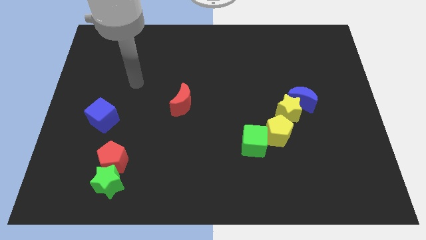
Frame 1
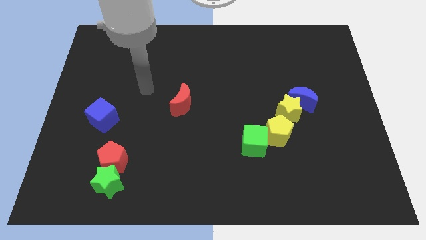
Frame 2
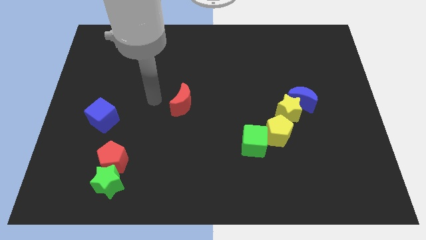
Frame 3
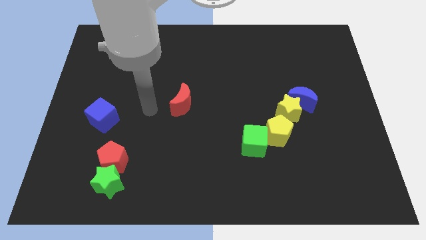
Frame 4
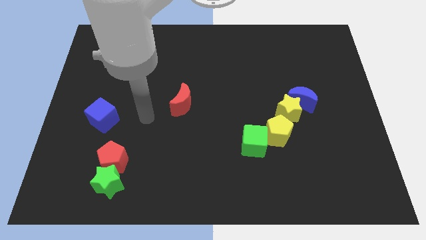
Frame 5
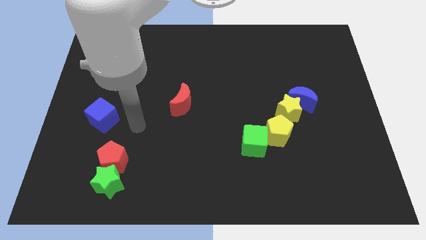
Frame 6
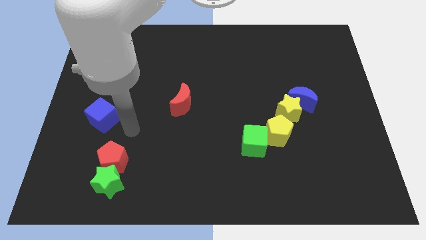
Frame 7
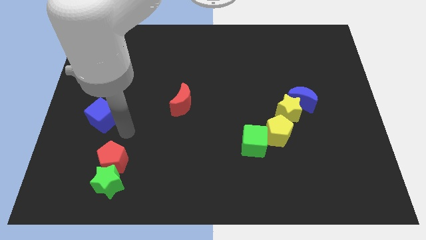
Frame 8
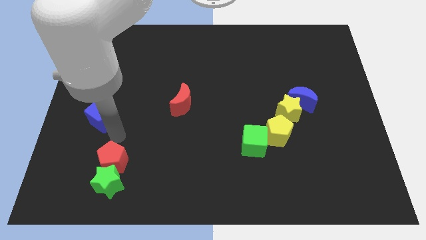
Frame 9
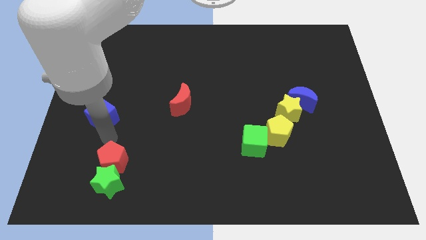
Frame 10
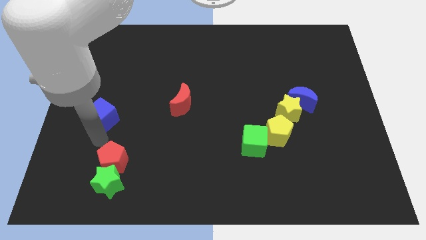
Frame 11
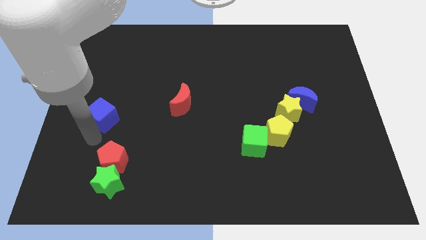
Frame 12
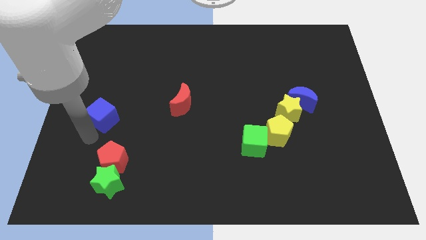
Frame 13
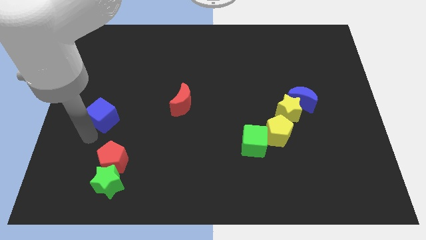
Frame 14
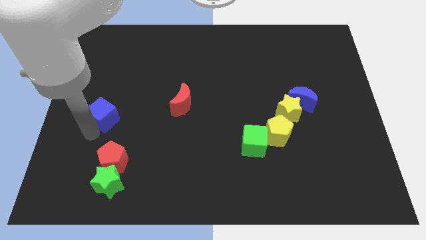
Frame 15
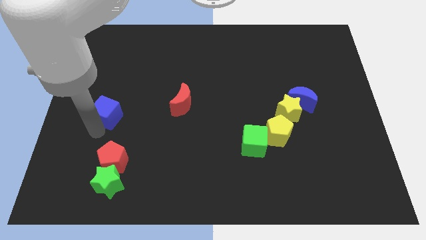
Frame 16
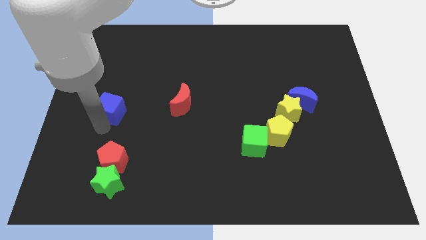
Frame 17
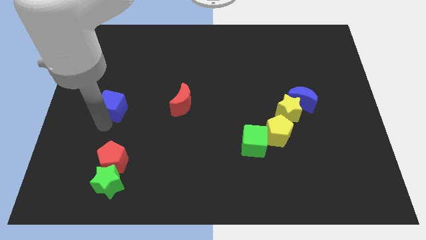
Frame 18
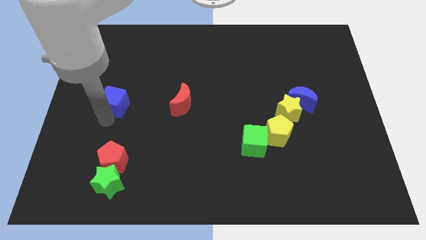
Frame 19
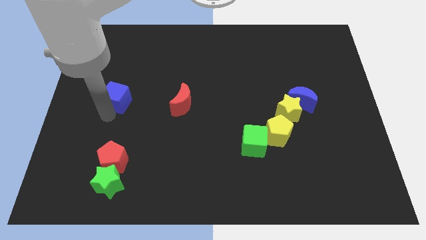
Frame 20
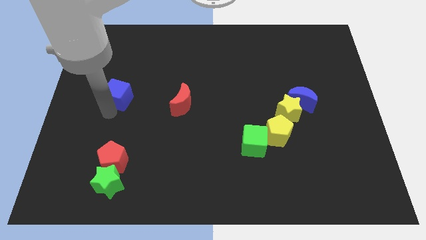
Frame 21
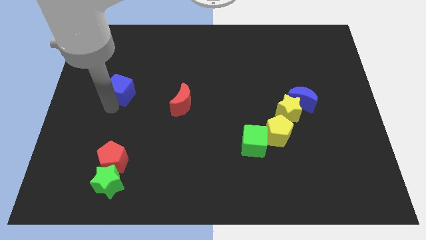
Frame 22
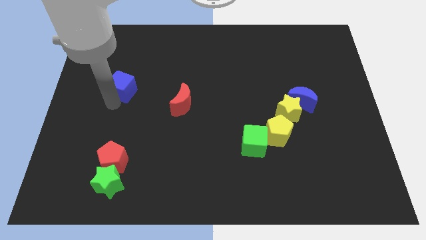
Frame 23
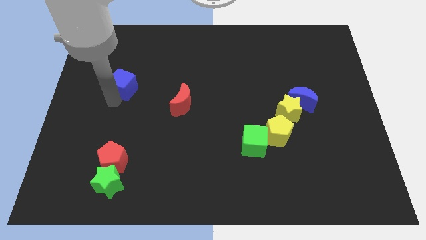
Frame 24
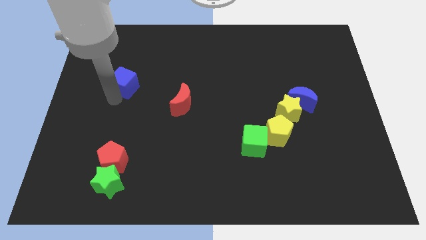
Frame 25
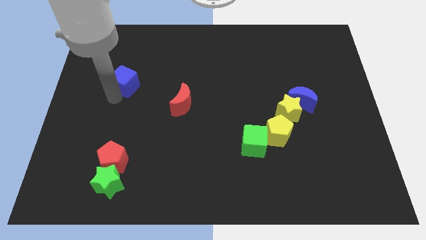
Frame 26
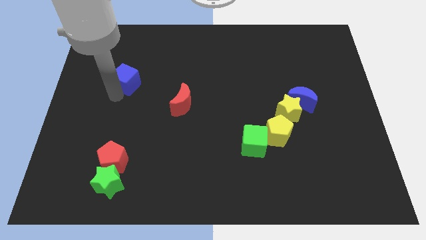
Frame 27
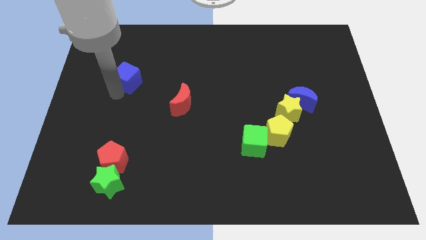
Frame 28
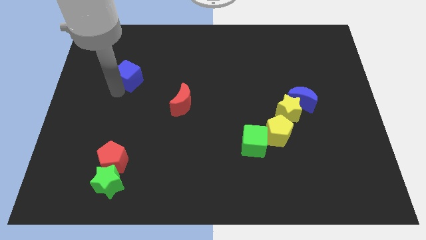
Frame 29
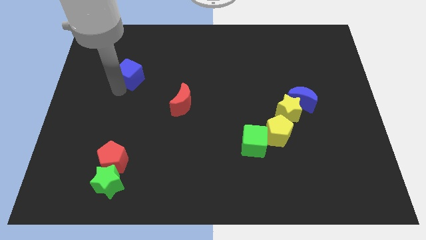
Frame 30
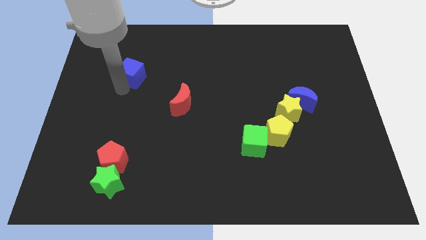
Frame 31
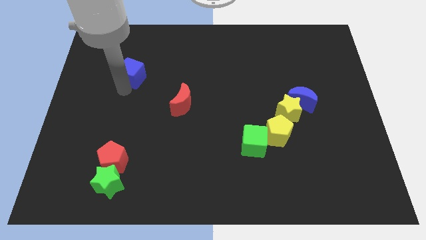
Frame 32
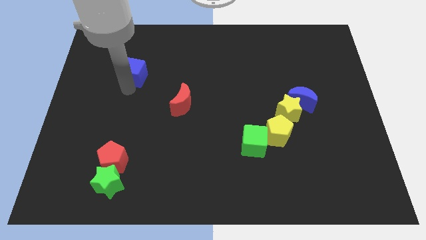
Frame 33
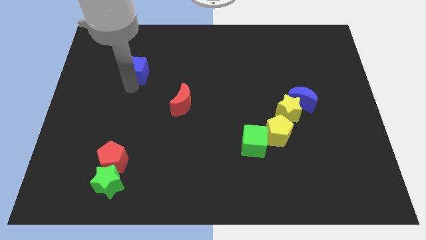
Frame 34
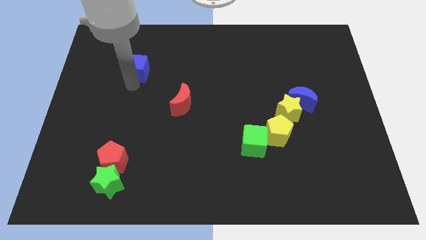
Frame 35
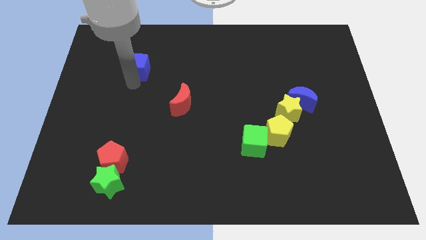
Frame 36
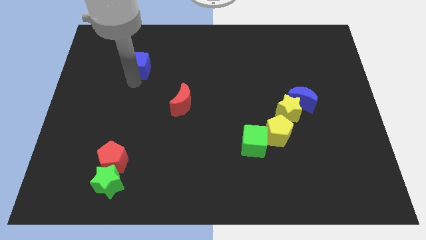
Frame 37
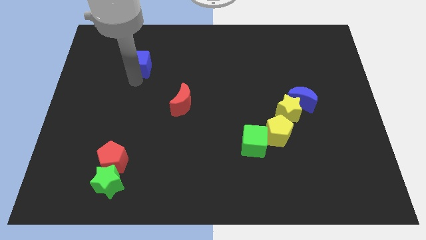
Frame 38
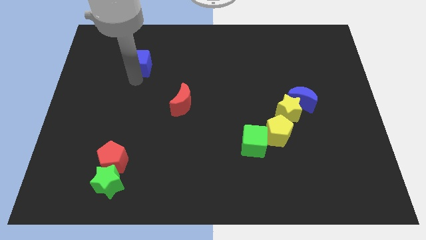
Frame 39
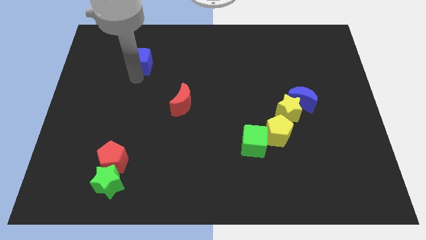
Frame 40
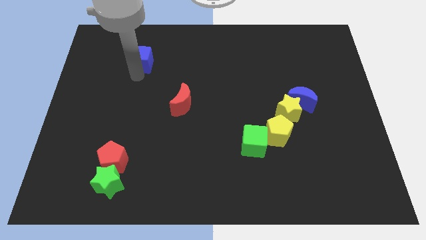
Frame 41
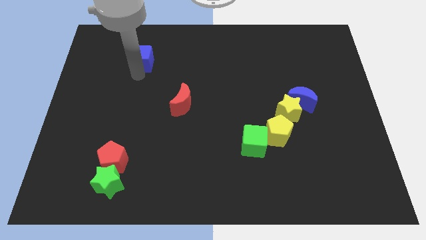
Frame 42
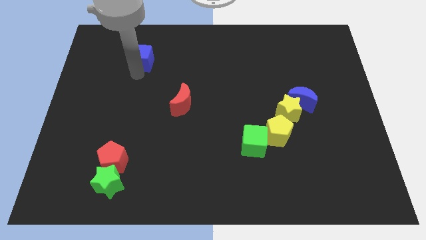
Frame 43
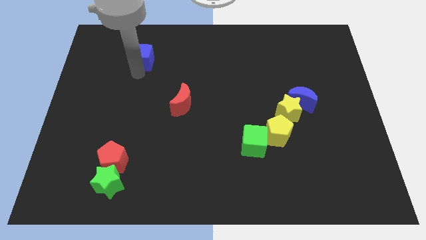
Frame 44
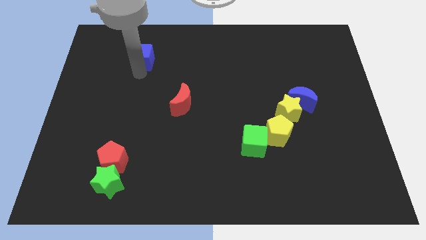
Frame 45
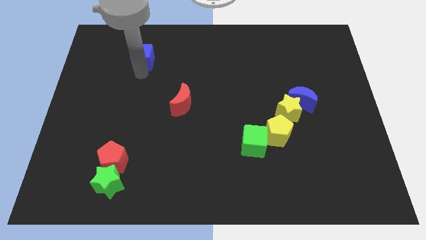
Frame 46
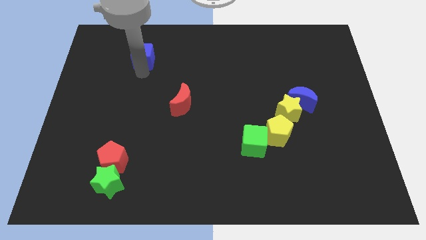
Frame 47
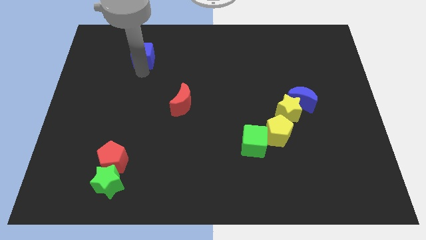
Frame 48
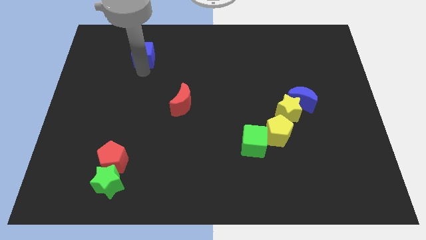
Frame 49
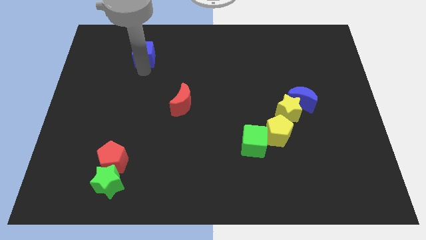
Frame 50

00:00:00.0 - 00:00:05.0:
move the blue cube to the top of the board

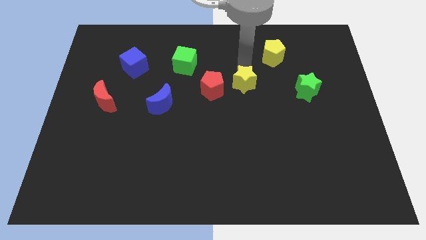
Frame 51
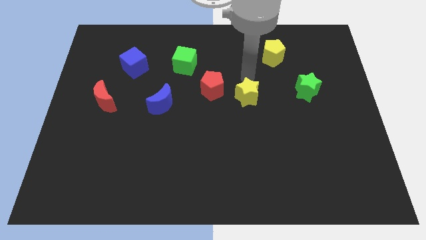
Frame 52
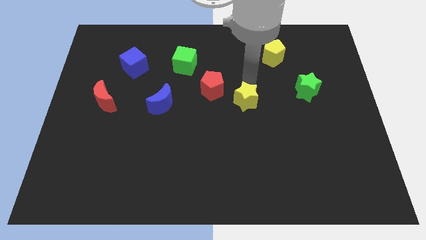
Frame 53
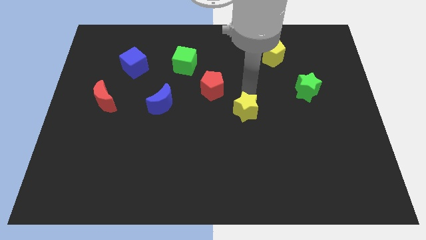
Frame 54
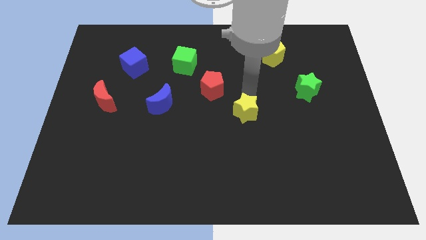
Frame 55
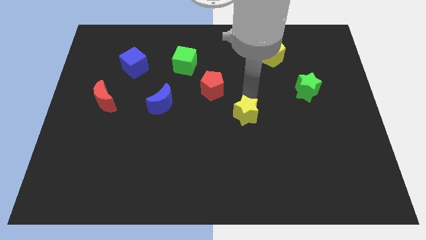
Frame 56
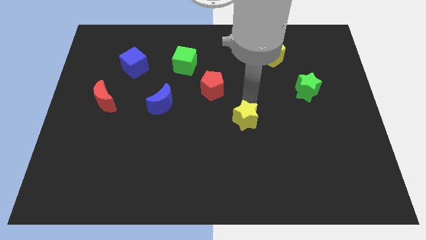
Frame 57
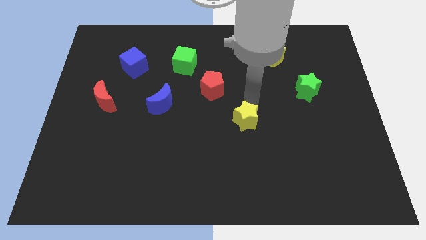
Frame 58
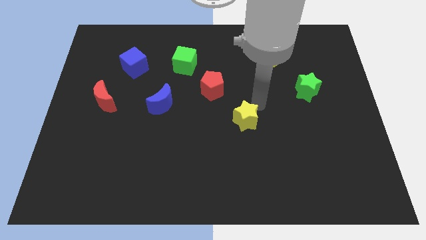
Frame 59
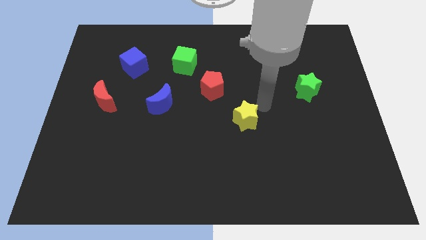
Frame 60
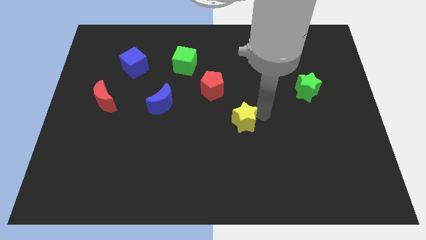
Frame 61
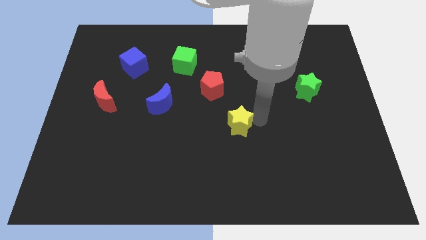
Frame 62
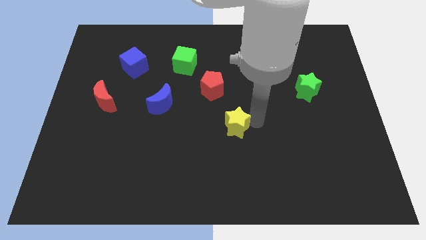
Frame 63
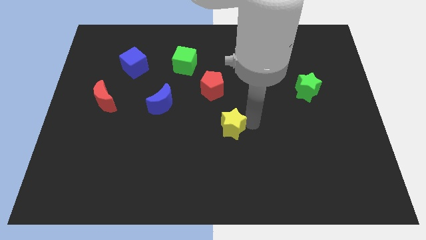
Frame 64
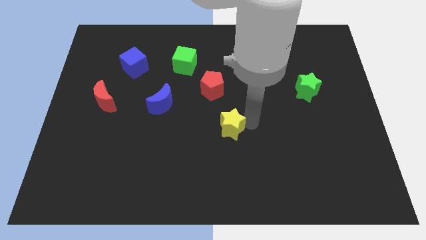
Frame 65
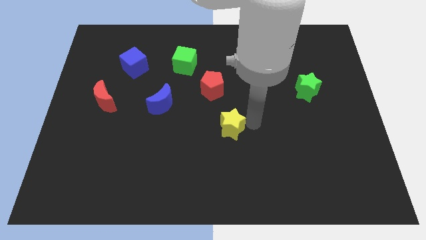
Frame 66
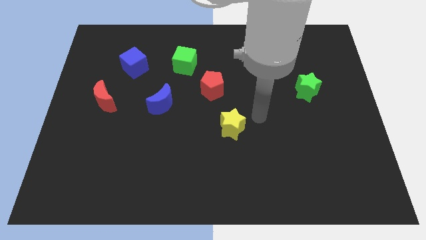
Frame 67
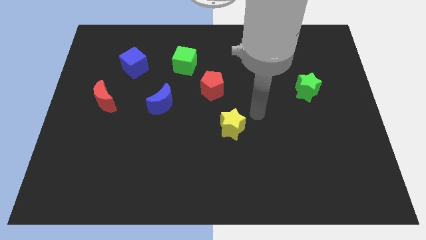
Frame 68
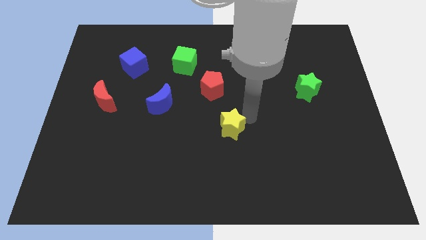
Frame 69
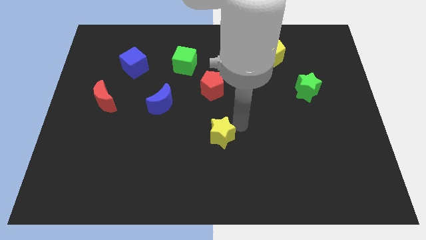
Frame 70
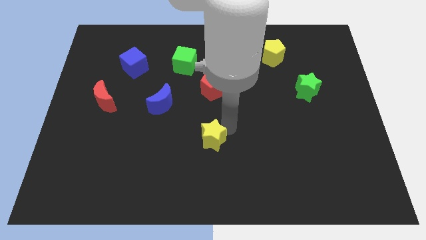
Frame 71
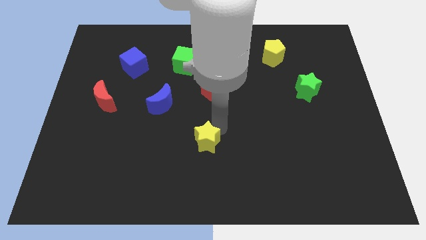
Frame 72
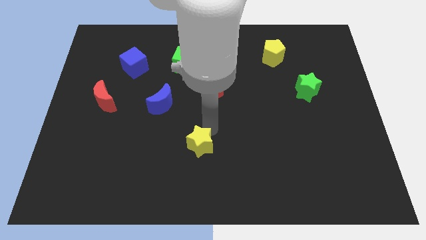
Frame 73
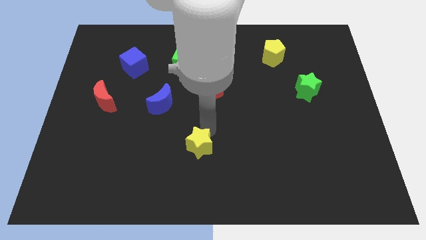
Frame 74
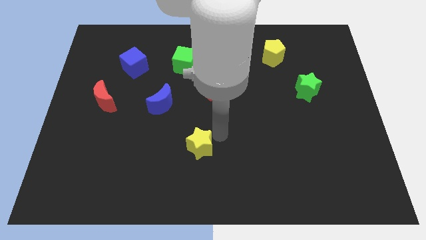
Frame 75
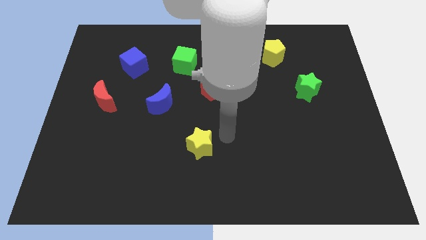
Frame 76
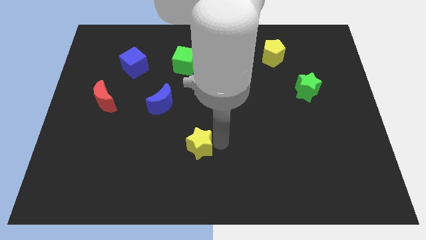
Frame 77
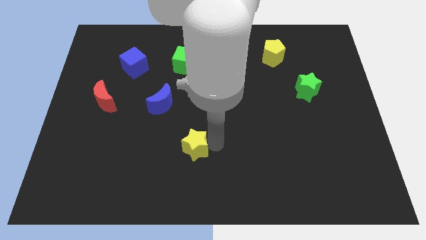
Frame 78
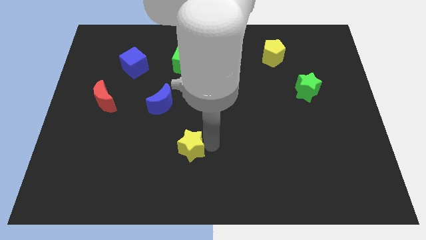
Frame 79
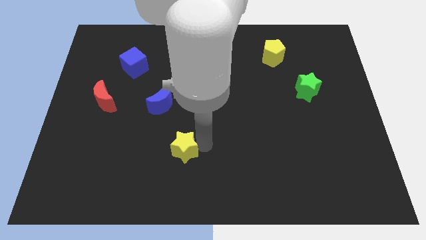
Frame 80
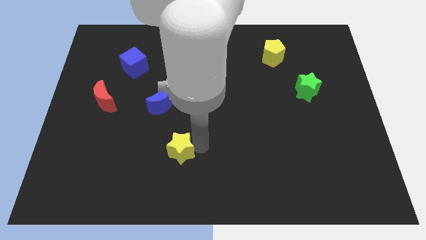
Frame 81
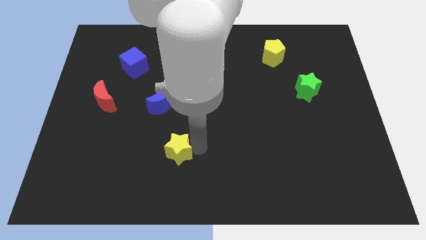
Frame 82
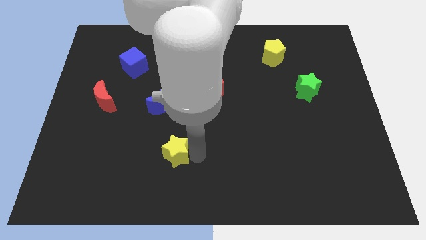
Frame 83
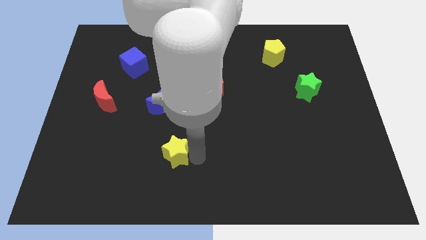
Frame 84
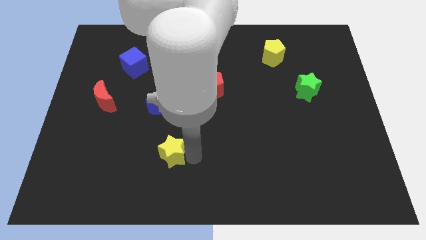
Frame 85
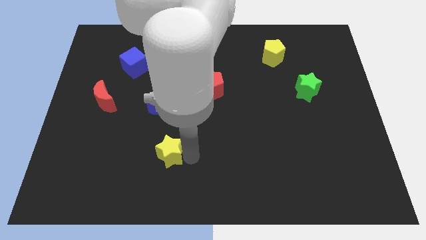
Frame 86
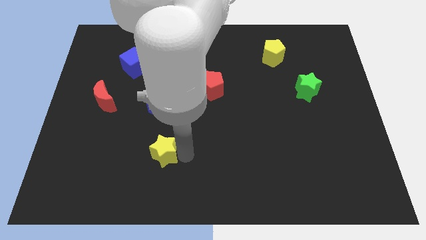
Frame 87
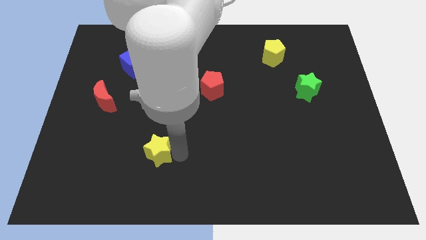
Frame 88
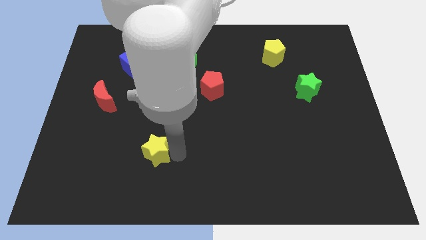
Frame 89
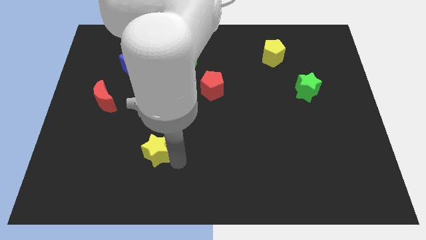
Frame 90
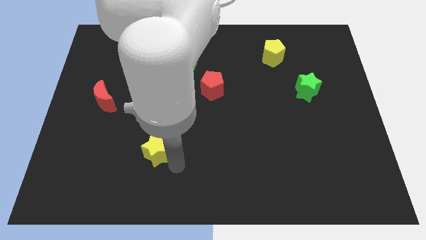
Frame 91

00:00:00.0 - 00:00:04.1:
push the yellow star diagonal to the red pentagon
